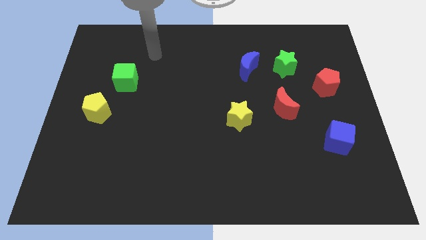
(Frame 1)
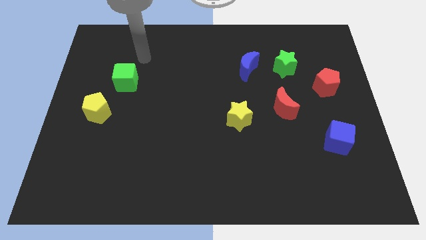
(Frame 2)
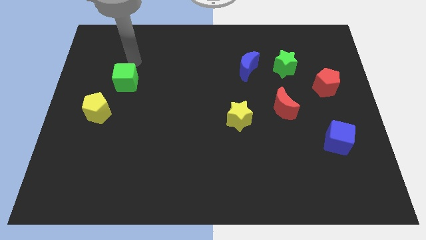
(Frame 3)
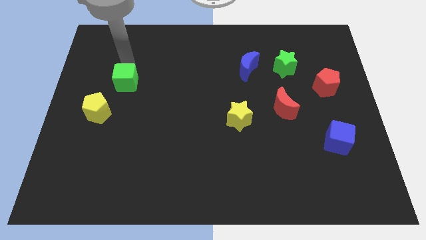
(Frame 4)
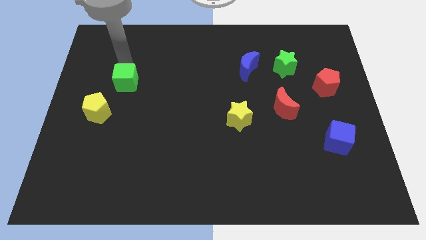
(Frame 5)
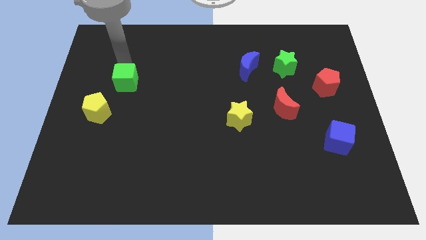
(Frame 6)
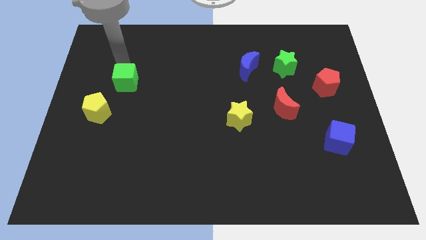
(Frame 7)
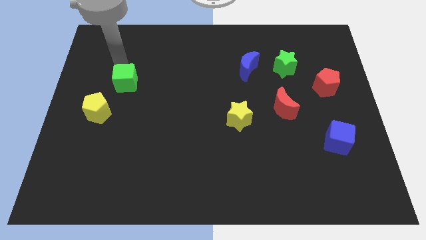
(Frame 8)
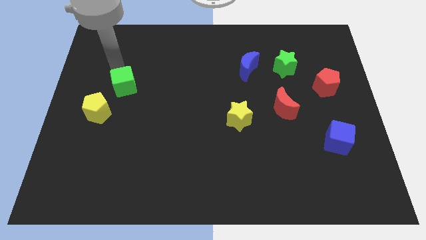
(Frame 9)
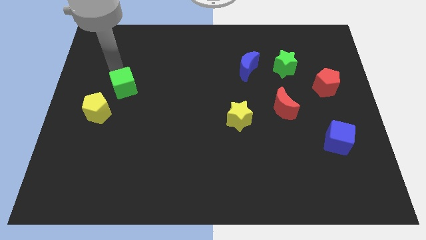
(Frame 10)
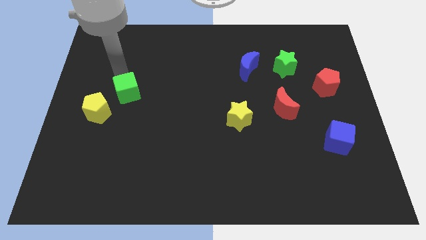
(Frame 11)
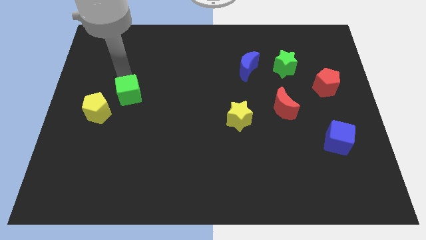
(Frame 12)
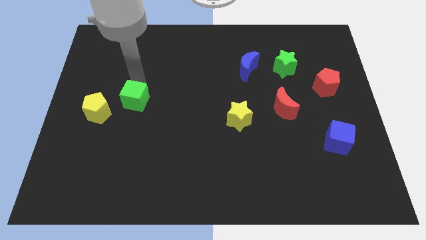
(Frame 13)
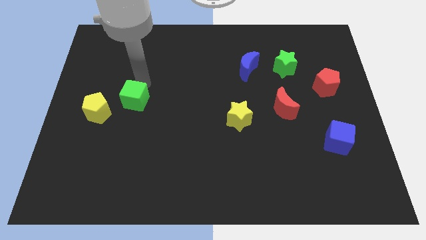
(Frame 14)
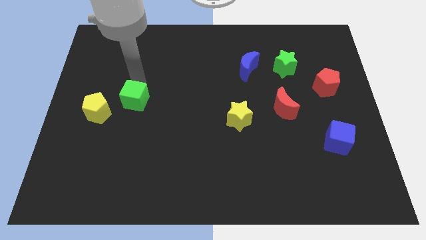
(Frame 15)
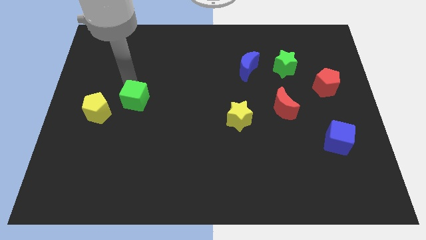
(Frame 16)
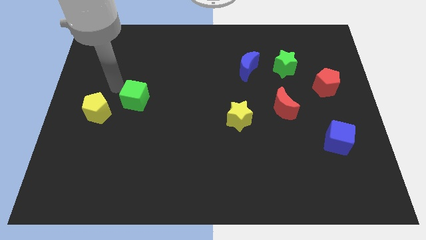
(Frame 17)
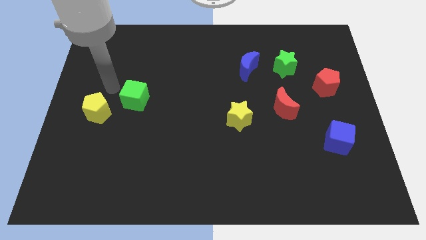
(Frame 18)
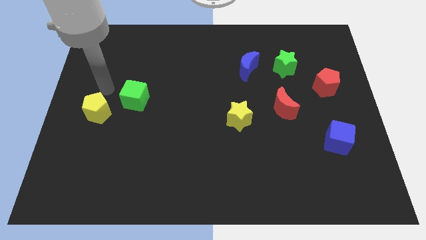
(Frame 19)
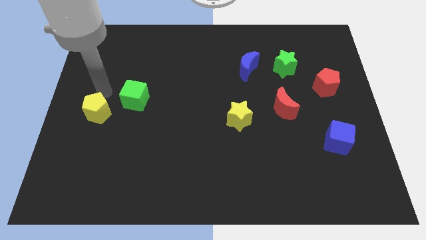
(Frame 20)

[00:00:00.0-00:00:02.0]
push the green cube downwards slightly

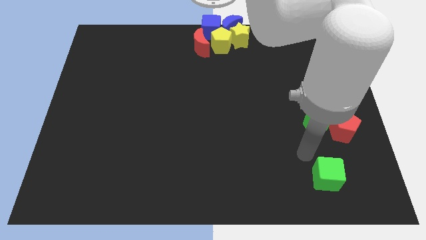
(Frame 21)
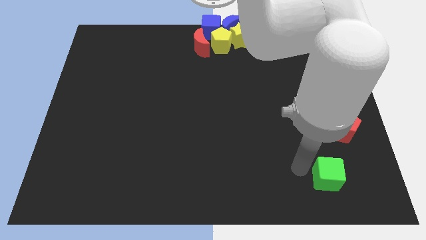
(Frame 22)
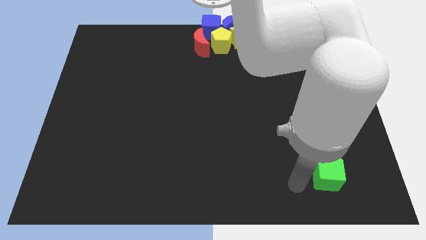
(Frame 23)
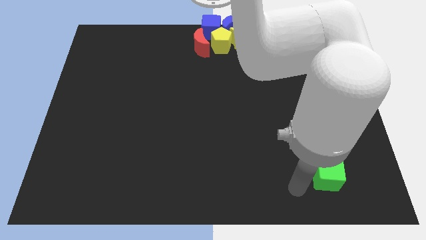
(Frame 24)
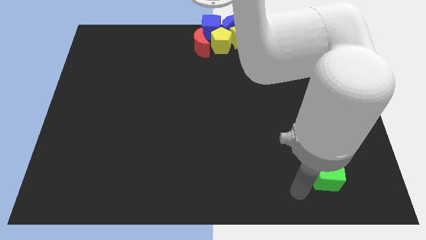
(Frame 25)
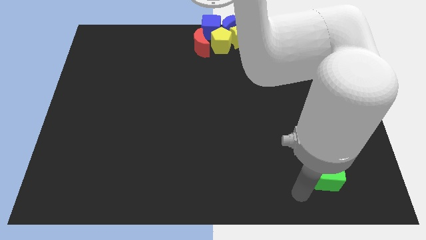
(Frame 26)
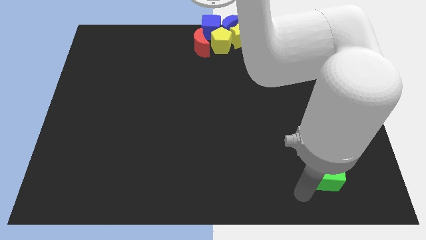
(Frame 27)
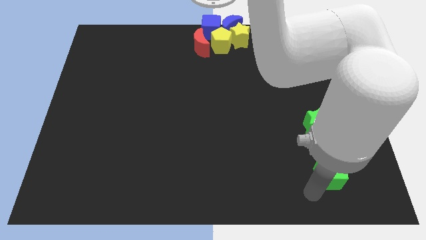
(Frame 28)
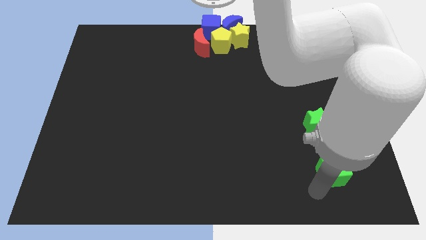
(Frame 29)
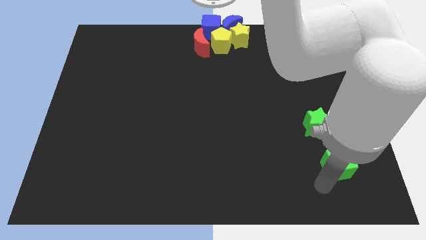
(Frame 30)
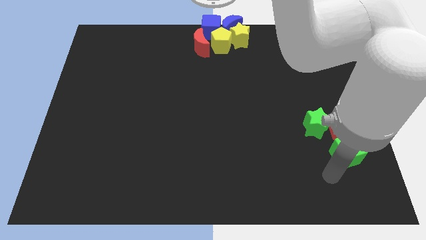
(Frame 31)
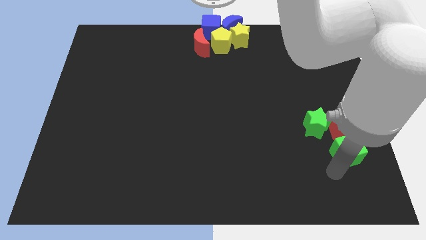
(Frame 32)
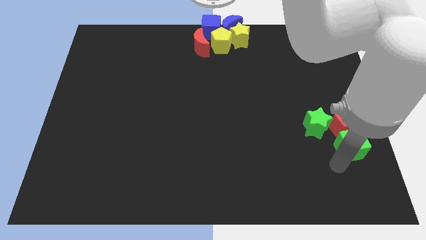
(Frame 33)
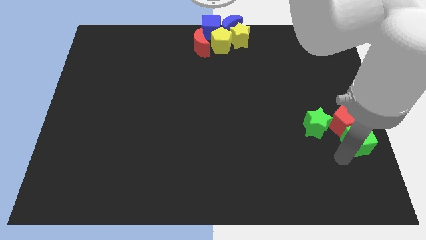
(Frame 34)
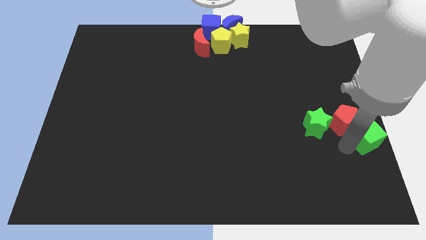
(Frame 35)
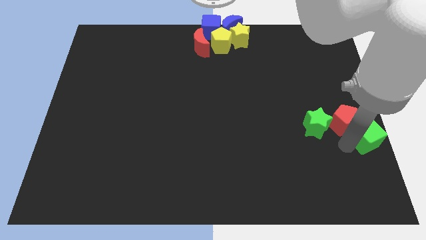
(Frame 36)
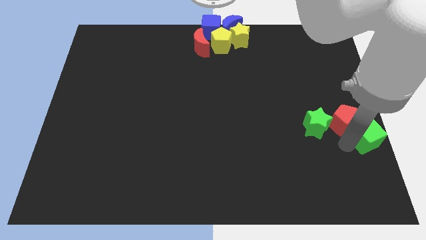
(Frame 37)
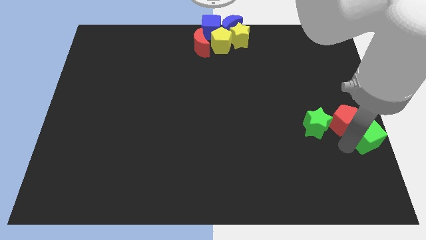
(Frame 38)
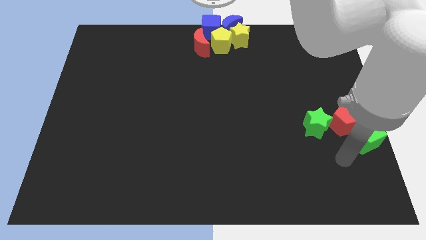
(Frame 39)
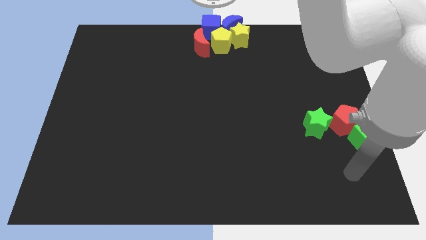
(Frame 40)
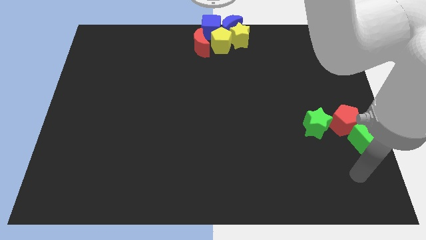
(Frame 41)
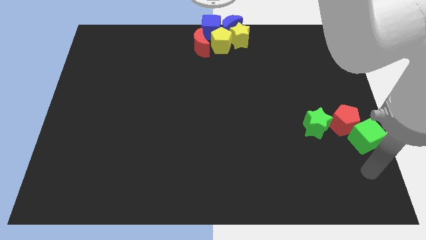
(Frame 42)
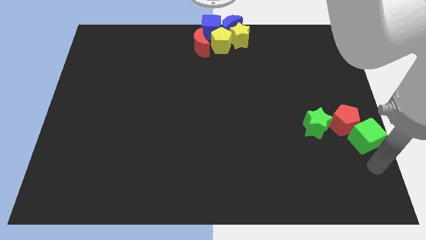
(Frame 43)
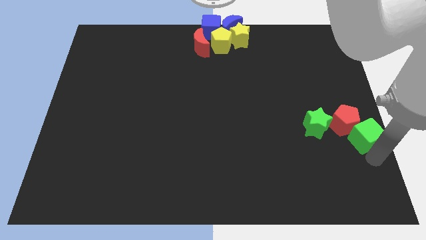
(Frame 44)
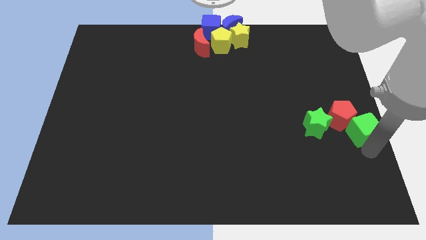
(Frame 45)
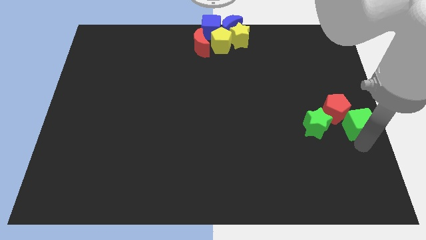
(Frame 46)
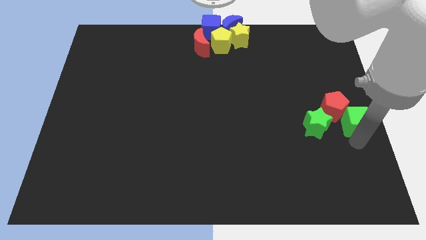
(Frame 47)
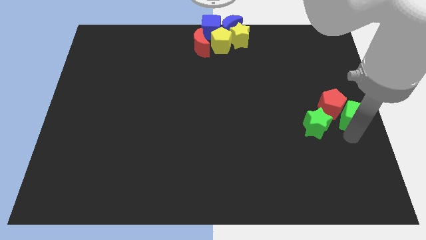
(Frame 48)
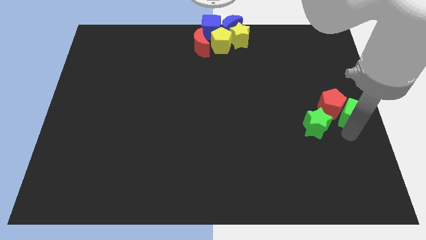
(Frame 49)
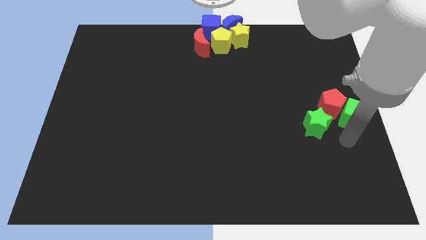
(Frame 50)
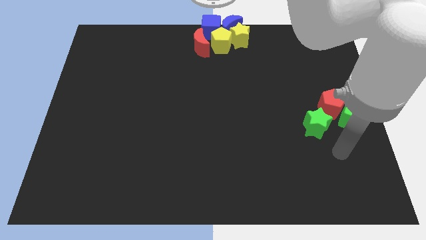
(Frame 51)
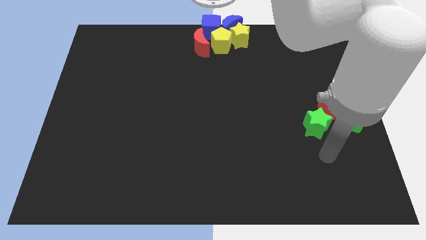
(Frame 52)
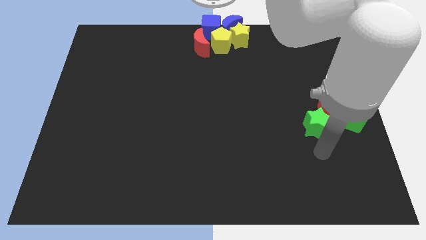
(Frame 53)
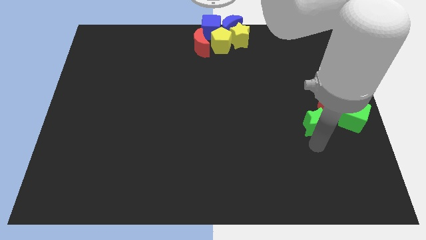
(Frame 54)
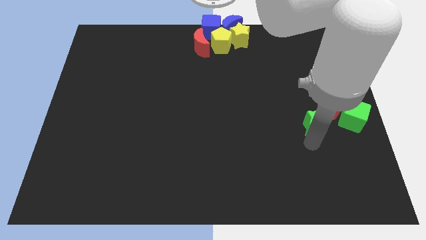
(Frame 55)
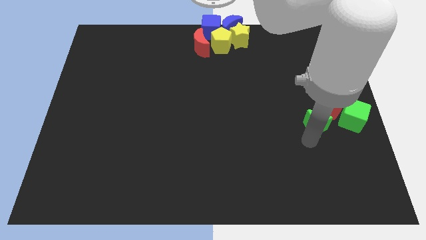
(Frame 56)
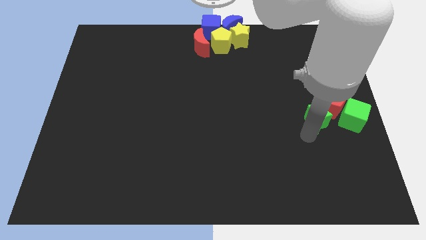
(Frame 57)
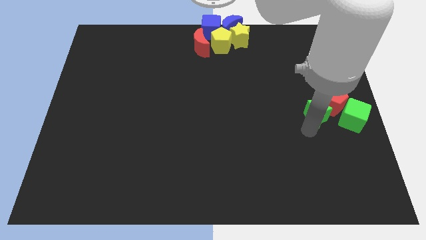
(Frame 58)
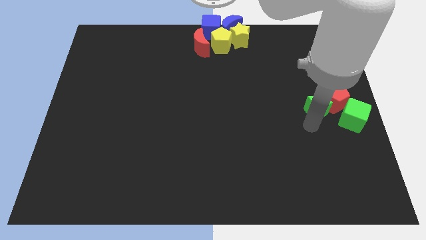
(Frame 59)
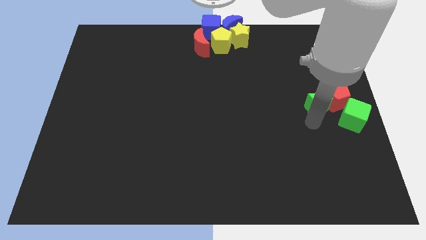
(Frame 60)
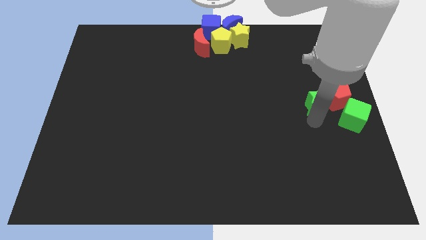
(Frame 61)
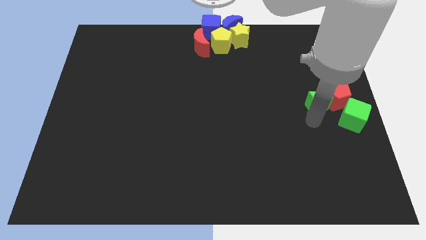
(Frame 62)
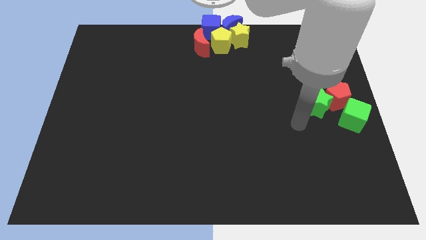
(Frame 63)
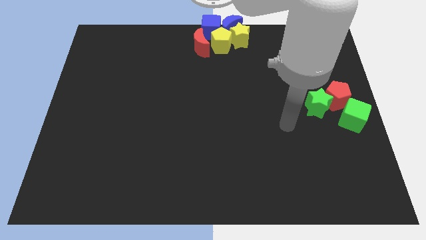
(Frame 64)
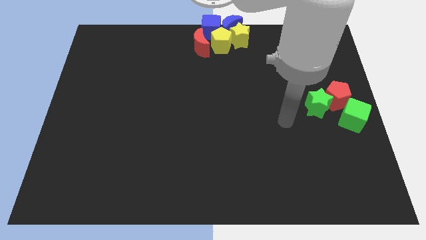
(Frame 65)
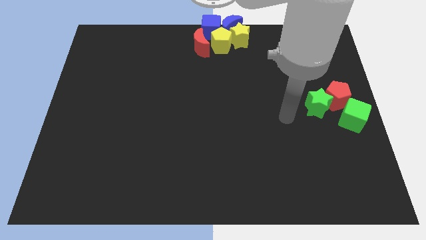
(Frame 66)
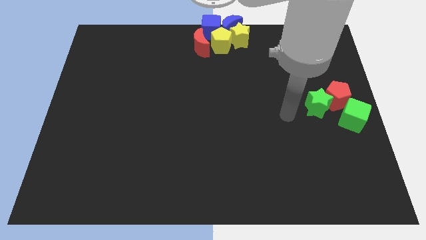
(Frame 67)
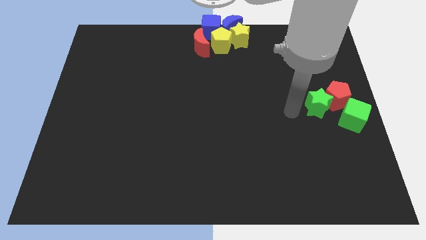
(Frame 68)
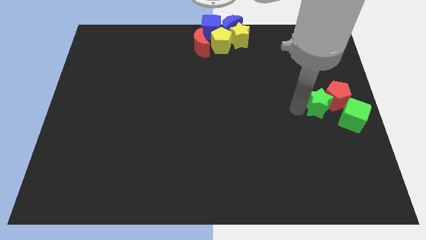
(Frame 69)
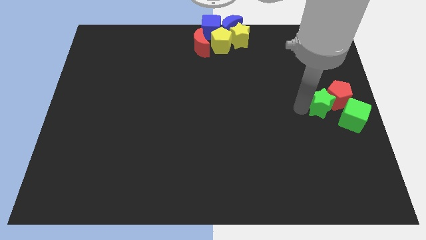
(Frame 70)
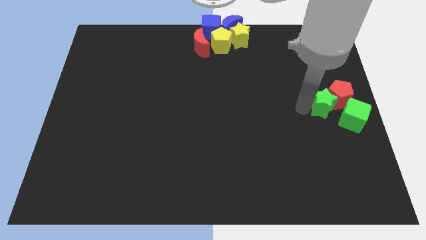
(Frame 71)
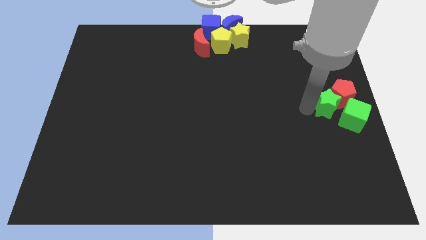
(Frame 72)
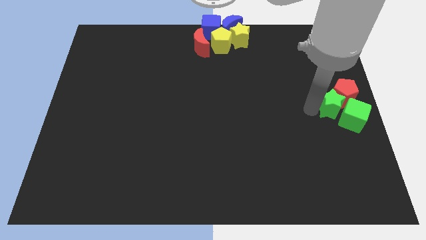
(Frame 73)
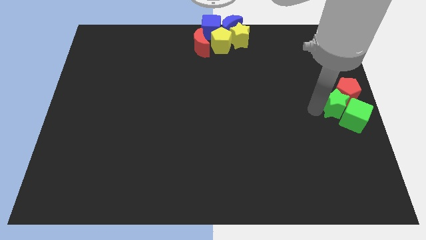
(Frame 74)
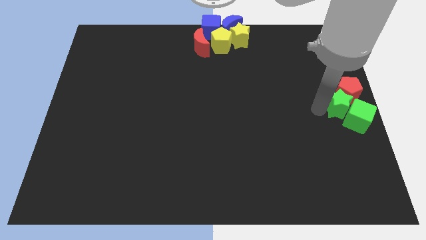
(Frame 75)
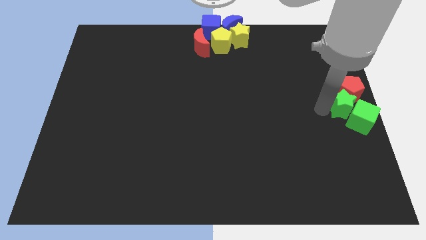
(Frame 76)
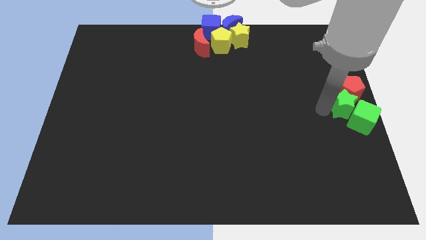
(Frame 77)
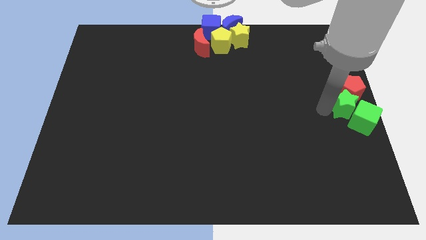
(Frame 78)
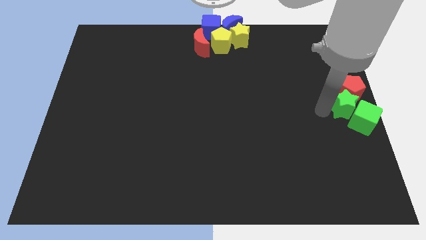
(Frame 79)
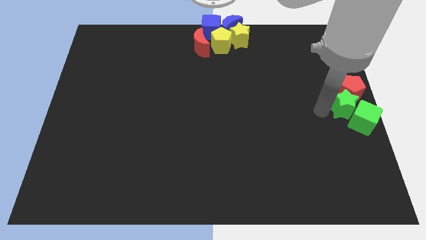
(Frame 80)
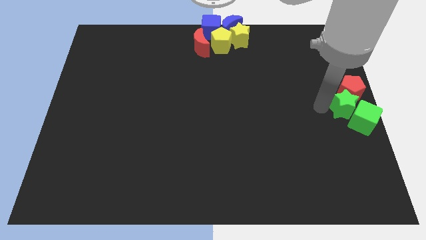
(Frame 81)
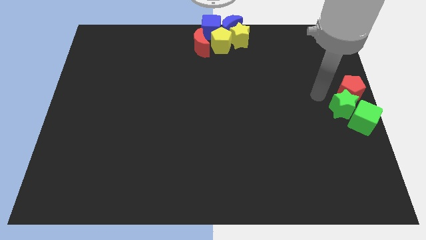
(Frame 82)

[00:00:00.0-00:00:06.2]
push the green star and red pentagon with green cube

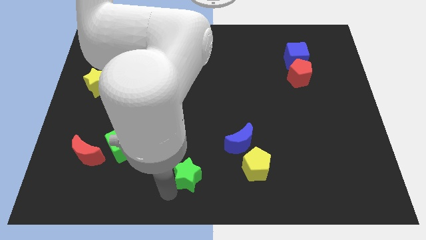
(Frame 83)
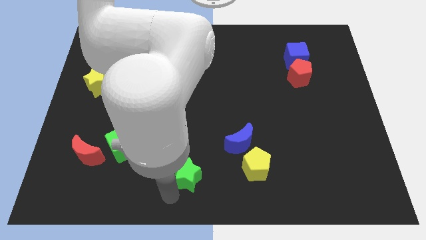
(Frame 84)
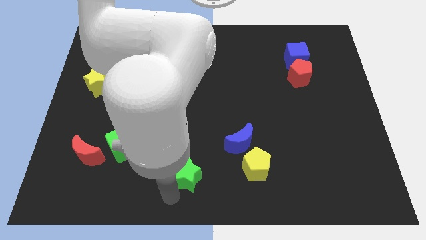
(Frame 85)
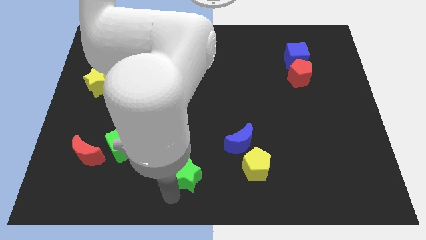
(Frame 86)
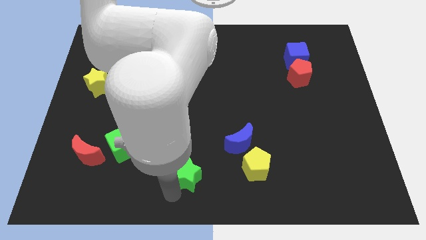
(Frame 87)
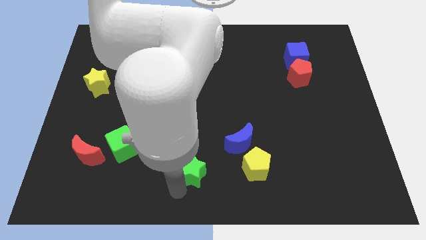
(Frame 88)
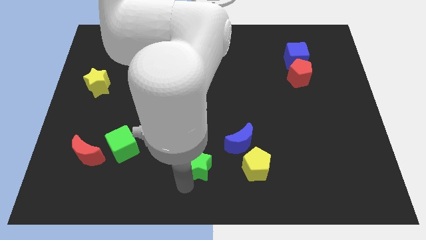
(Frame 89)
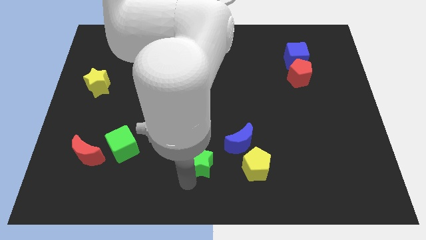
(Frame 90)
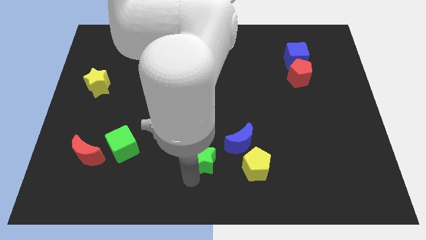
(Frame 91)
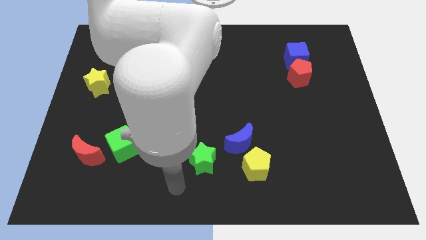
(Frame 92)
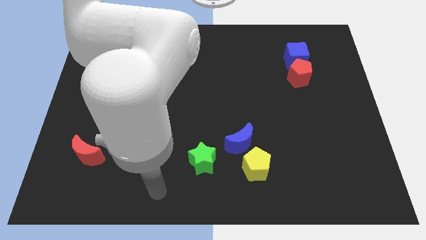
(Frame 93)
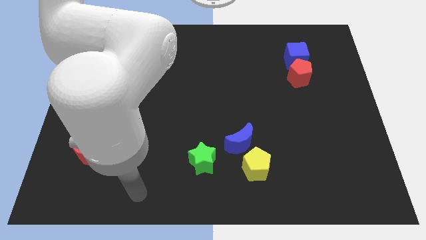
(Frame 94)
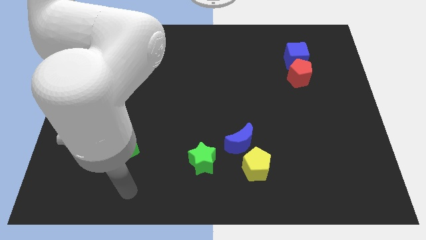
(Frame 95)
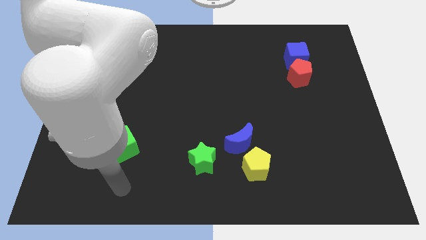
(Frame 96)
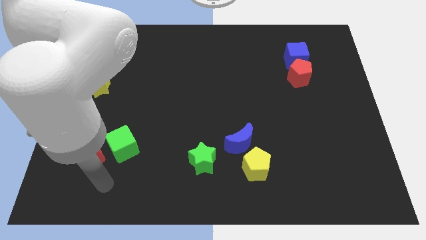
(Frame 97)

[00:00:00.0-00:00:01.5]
slightly push green star towards near blue moon
